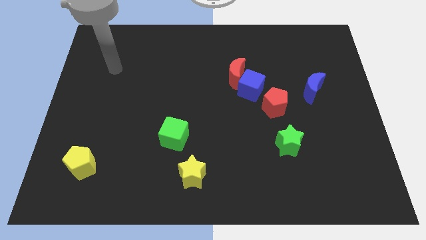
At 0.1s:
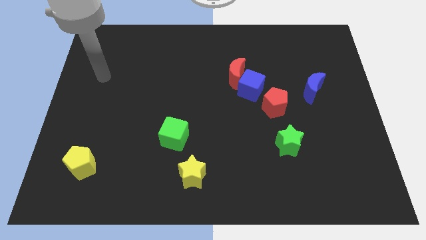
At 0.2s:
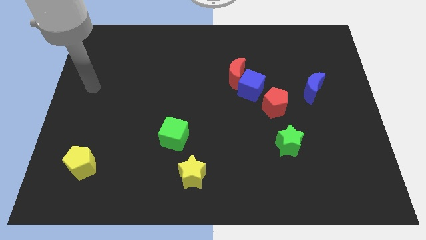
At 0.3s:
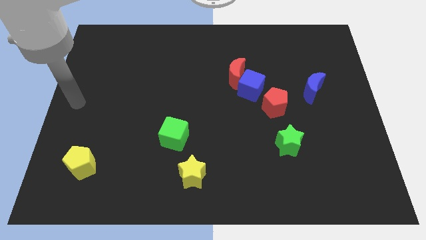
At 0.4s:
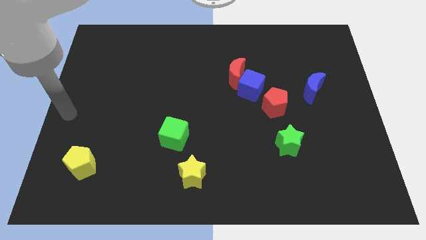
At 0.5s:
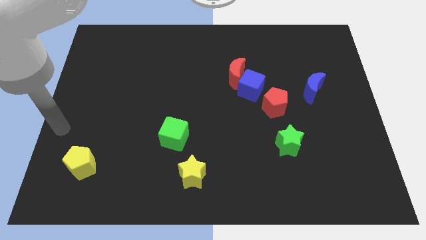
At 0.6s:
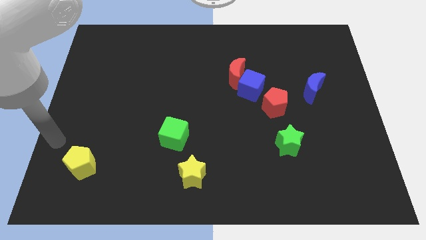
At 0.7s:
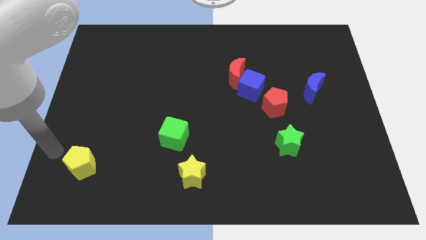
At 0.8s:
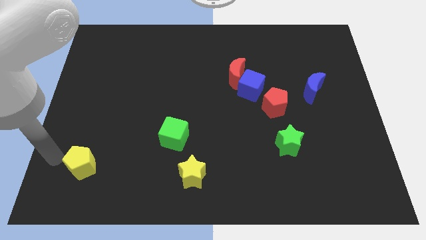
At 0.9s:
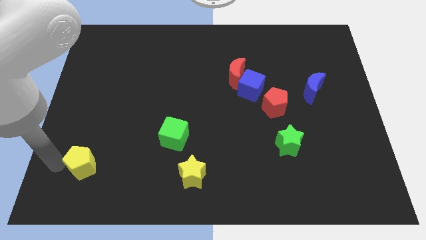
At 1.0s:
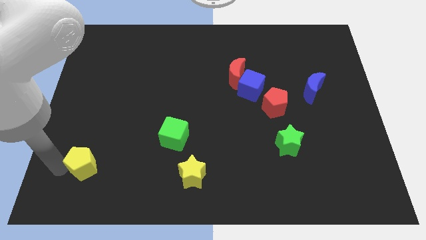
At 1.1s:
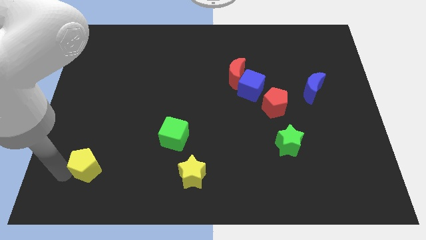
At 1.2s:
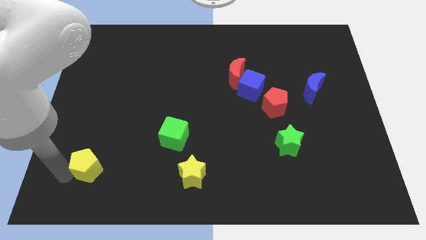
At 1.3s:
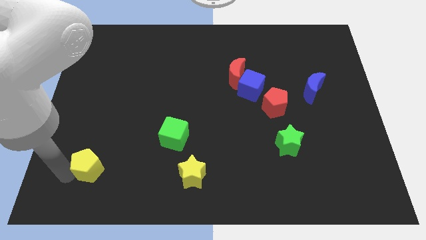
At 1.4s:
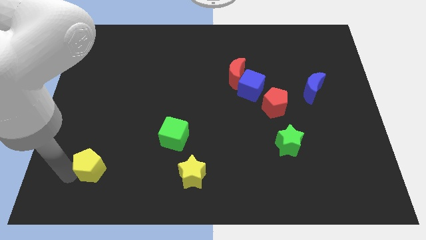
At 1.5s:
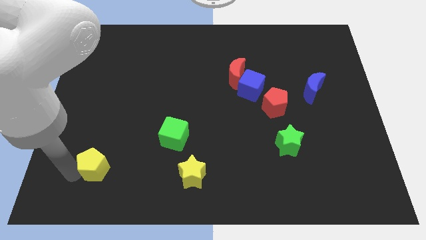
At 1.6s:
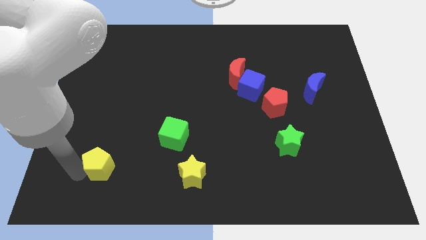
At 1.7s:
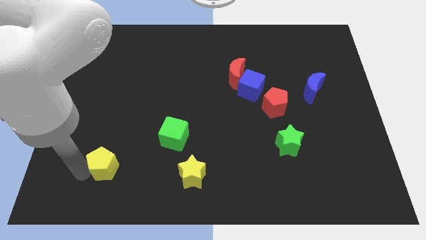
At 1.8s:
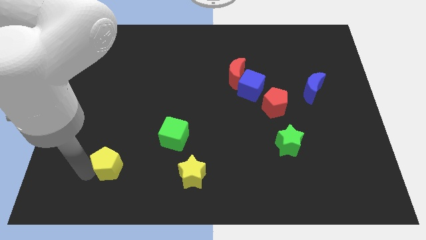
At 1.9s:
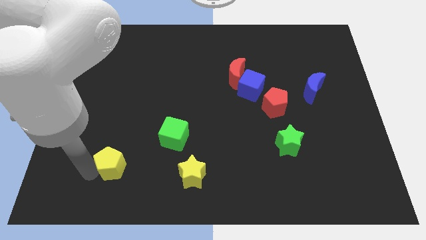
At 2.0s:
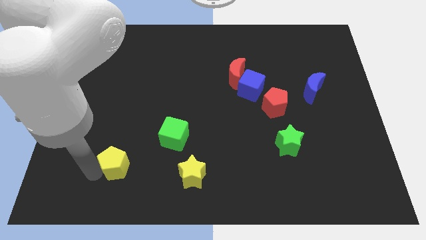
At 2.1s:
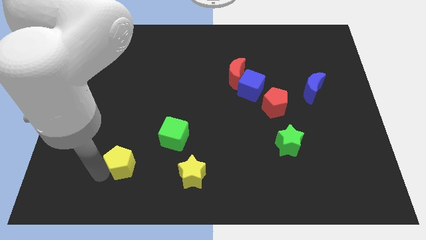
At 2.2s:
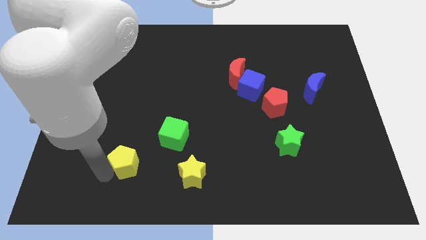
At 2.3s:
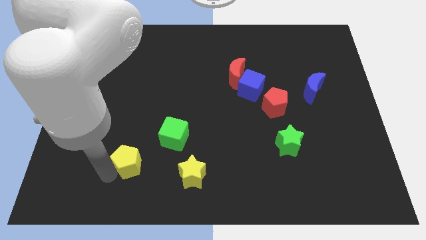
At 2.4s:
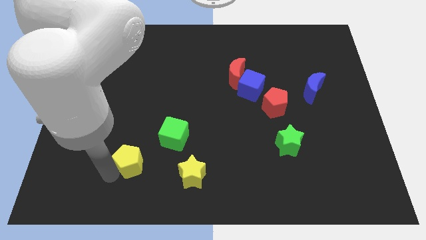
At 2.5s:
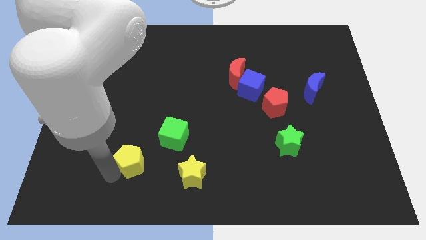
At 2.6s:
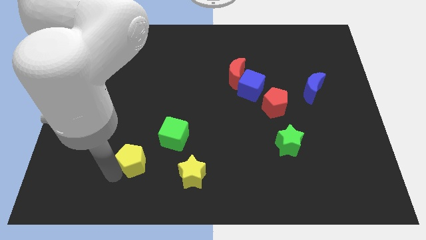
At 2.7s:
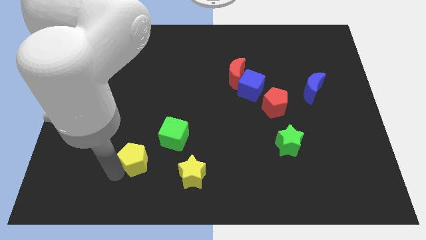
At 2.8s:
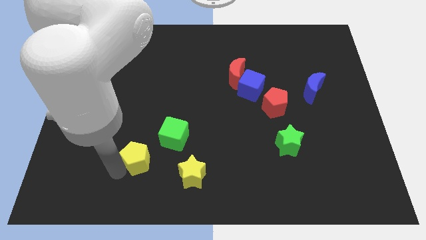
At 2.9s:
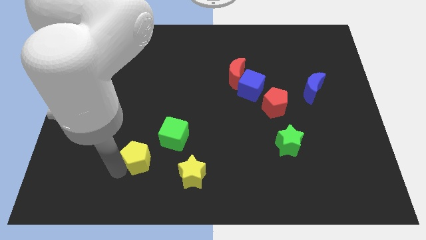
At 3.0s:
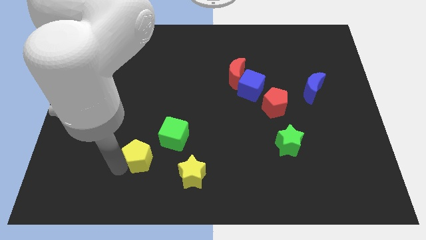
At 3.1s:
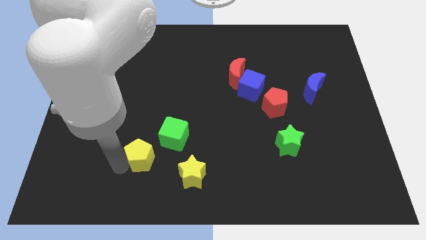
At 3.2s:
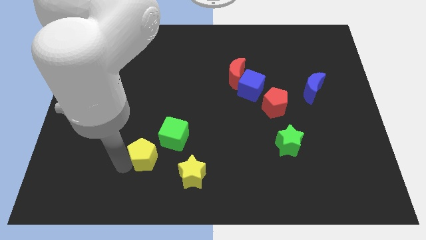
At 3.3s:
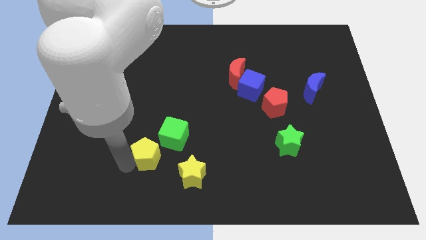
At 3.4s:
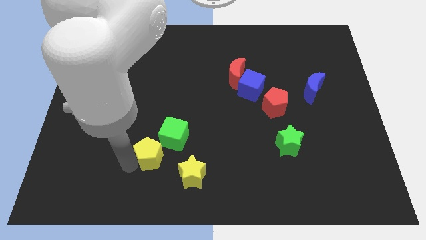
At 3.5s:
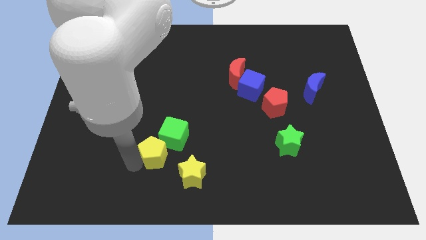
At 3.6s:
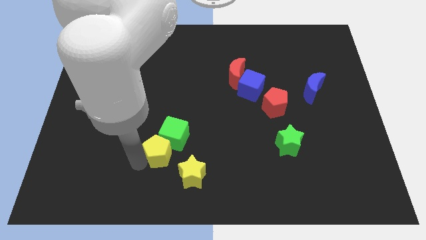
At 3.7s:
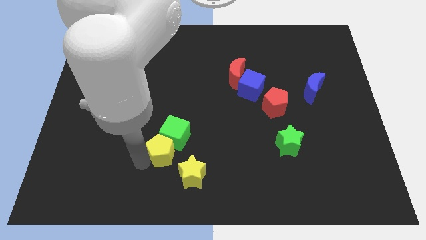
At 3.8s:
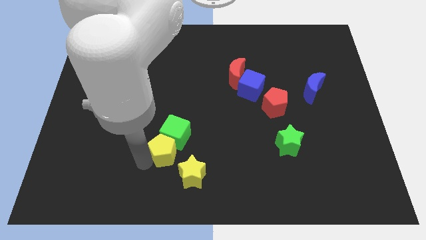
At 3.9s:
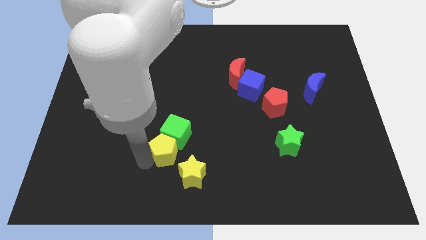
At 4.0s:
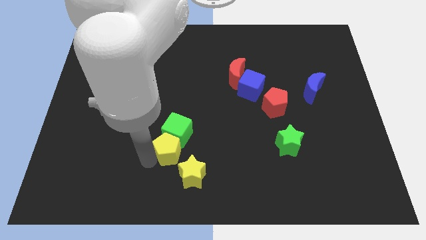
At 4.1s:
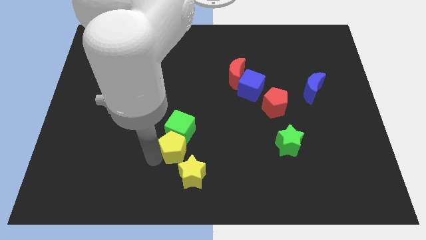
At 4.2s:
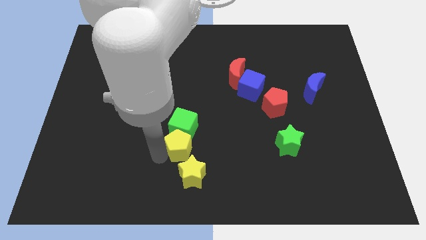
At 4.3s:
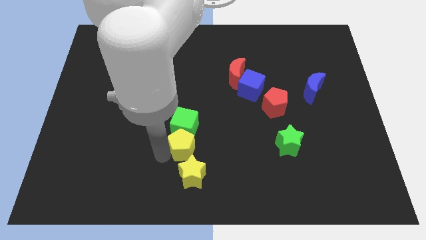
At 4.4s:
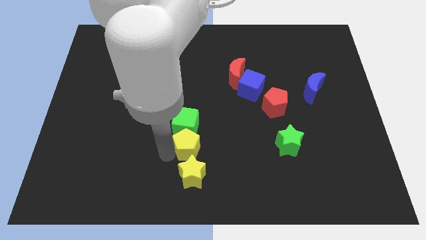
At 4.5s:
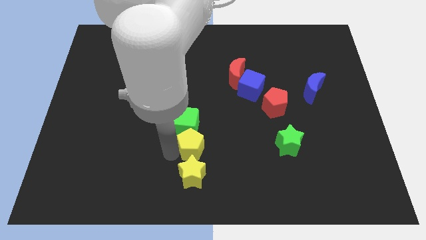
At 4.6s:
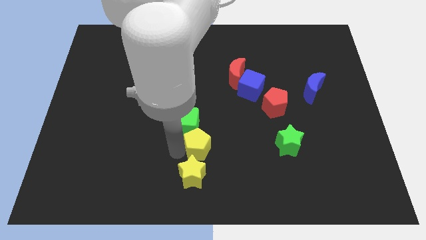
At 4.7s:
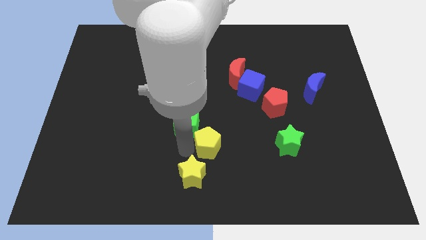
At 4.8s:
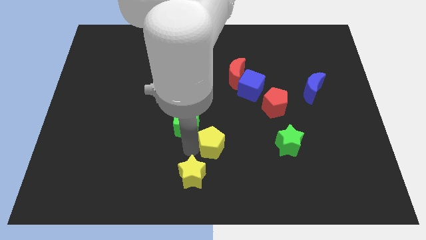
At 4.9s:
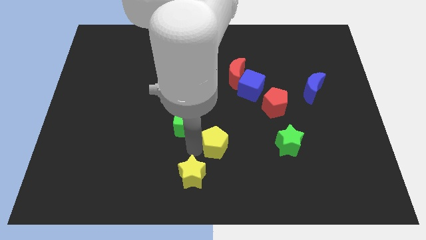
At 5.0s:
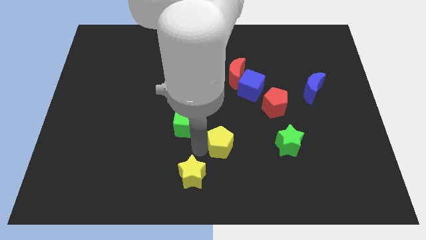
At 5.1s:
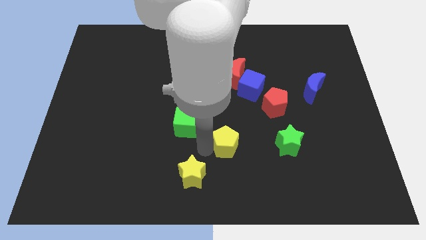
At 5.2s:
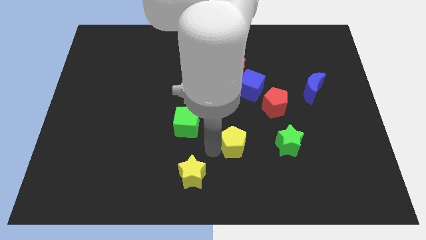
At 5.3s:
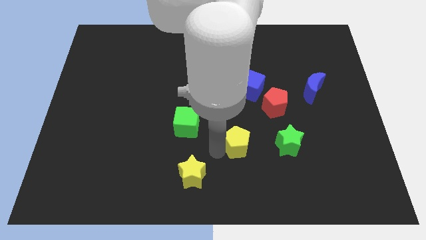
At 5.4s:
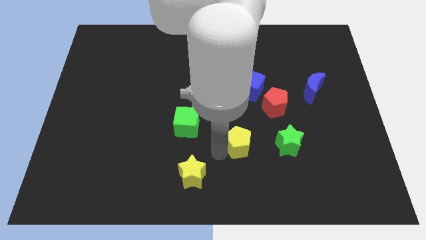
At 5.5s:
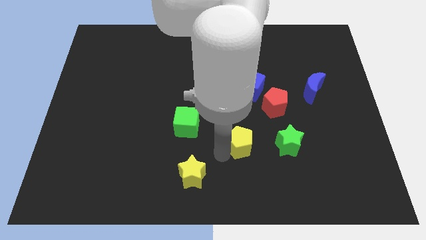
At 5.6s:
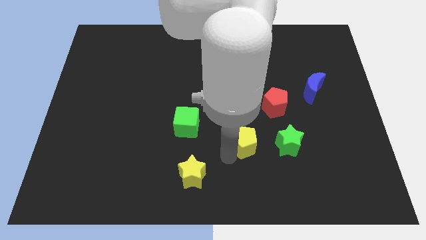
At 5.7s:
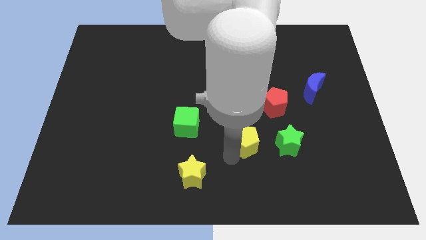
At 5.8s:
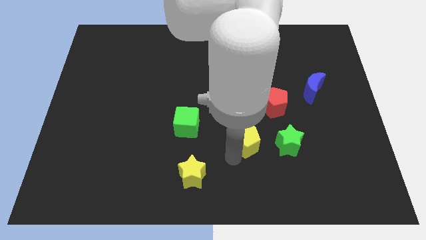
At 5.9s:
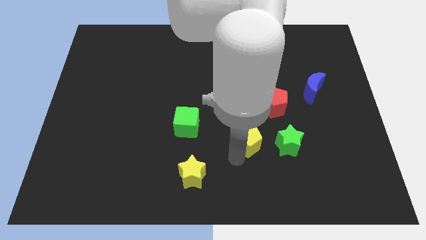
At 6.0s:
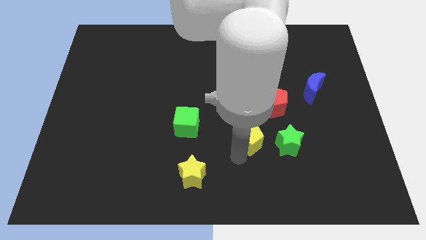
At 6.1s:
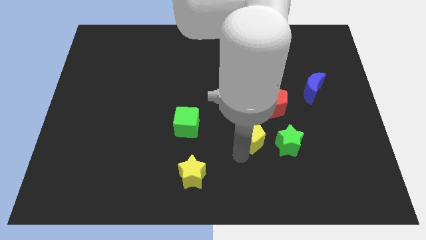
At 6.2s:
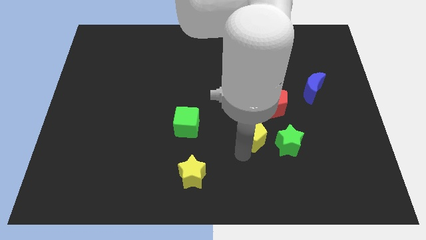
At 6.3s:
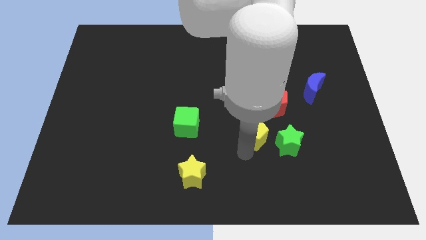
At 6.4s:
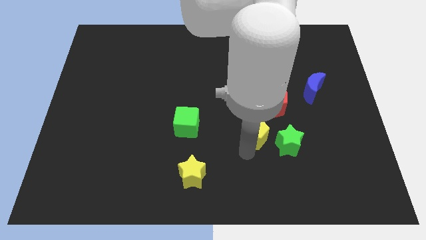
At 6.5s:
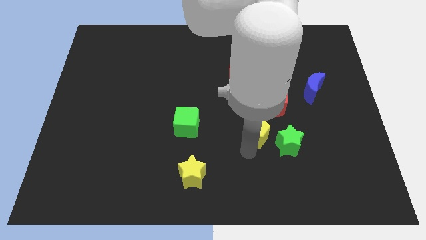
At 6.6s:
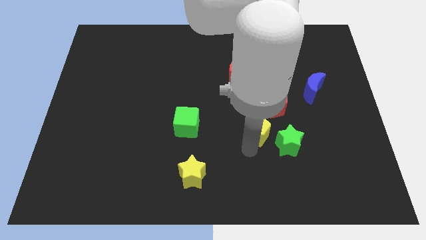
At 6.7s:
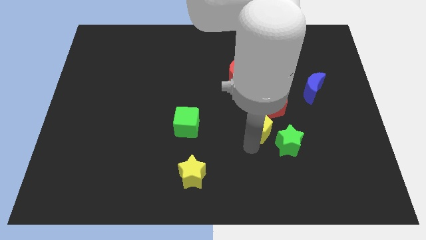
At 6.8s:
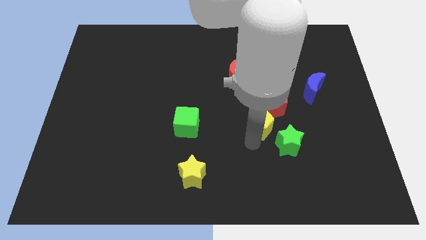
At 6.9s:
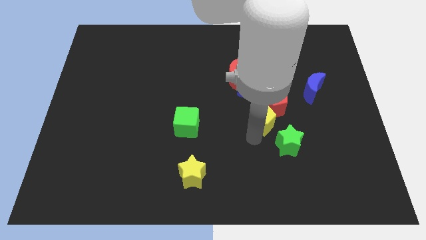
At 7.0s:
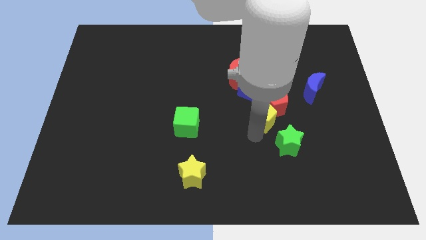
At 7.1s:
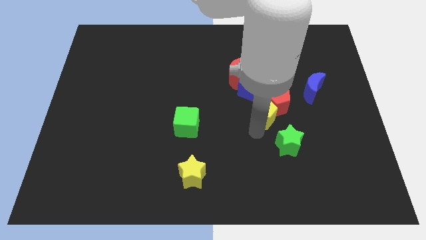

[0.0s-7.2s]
put the yellow pentagon towards the red pentagon

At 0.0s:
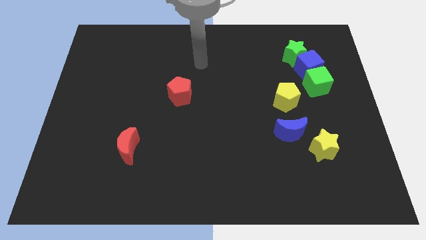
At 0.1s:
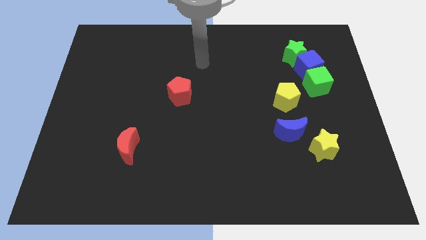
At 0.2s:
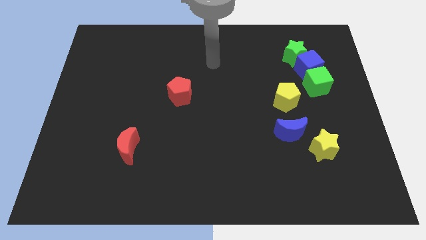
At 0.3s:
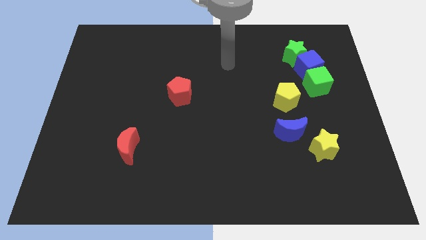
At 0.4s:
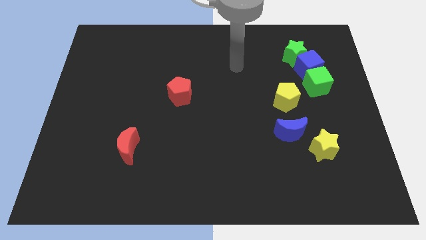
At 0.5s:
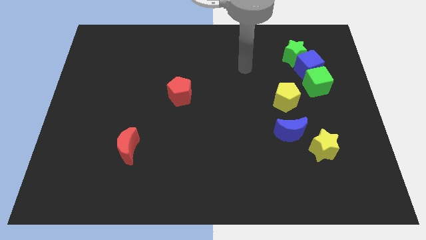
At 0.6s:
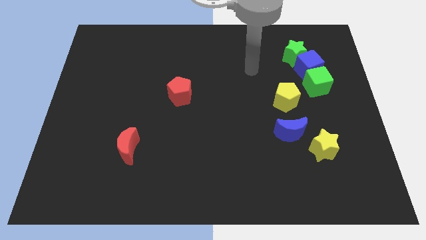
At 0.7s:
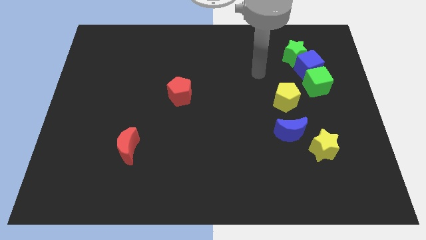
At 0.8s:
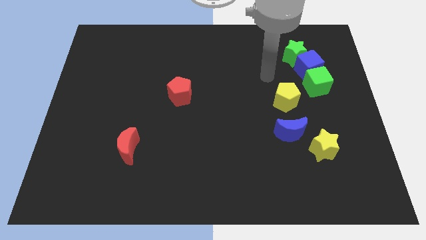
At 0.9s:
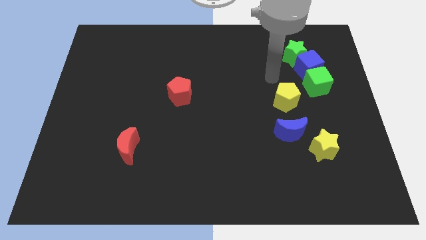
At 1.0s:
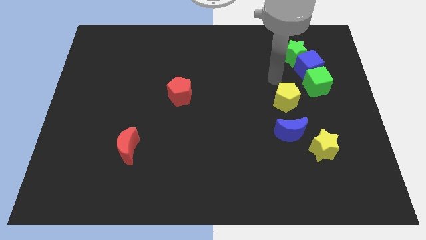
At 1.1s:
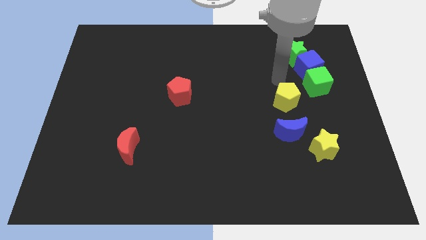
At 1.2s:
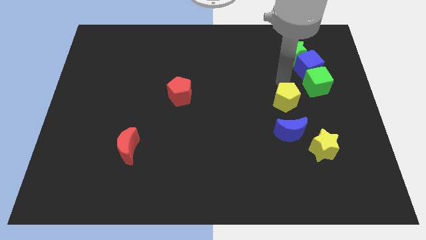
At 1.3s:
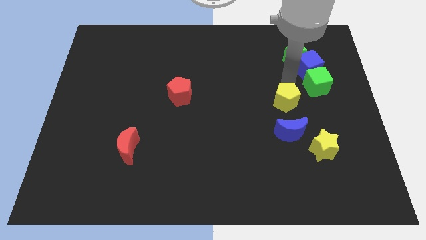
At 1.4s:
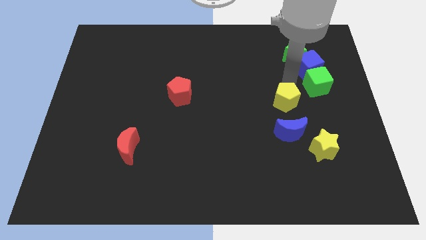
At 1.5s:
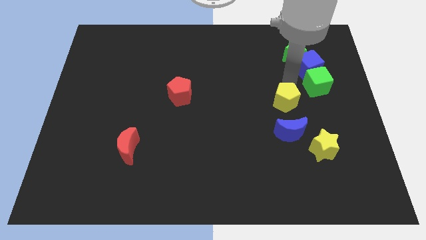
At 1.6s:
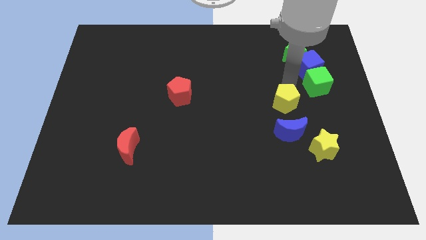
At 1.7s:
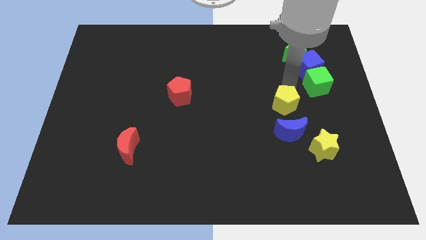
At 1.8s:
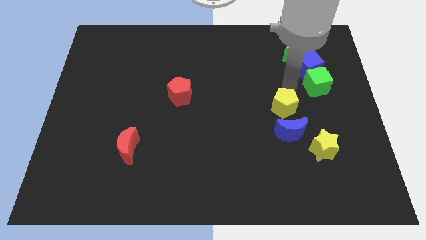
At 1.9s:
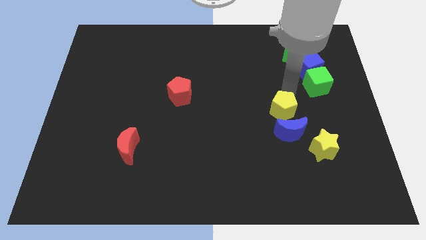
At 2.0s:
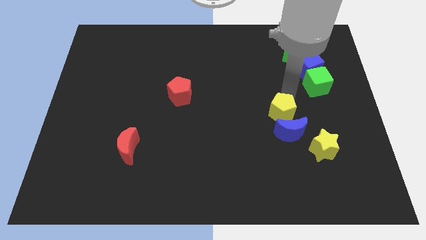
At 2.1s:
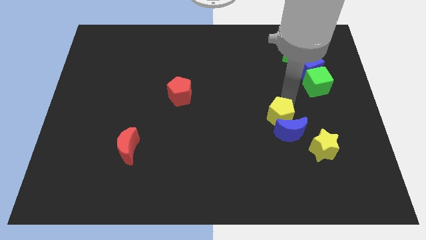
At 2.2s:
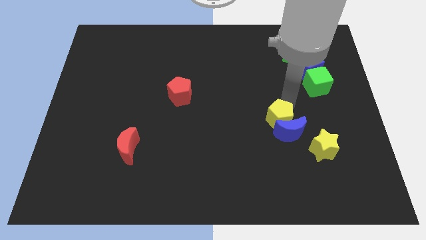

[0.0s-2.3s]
put the yellow pentagon towards the blue moon
